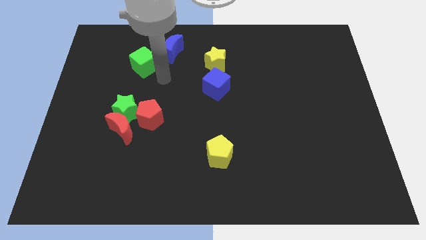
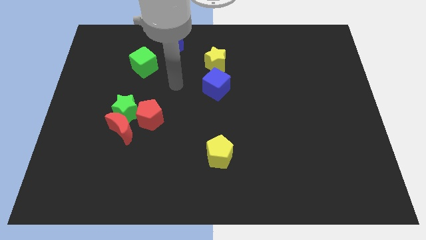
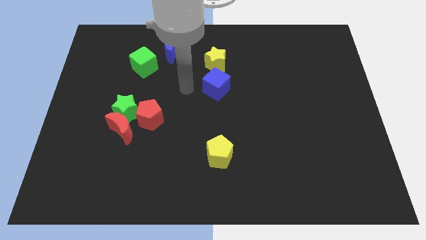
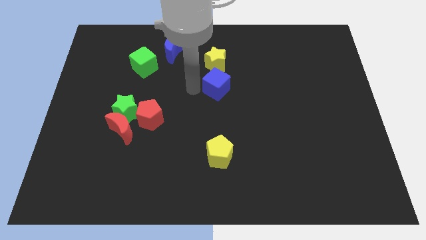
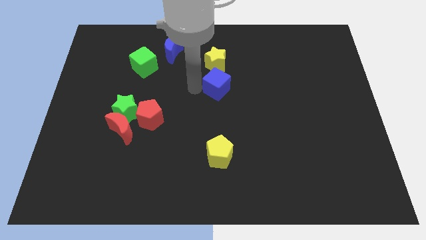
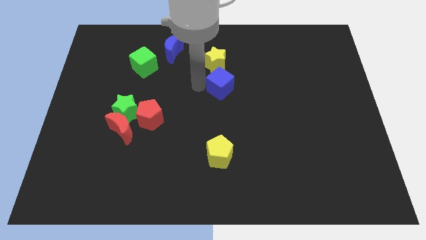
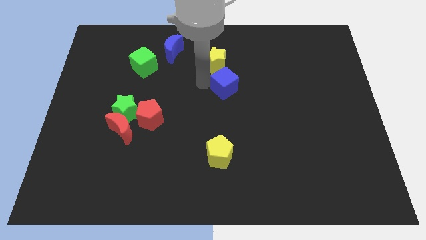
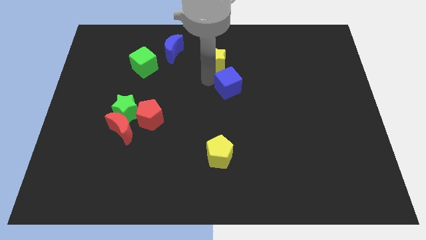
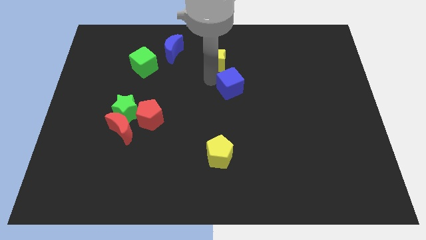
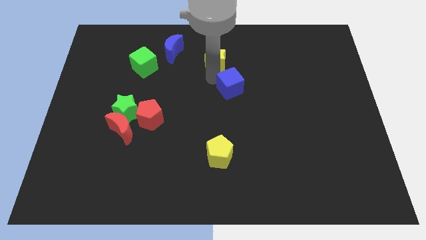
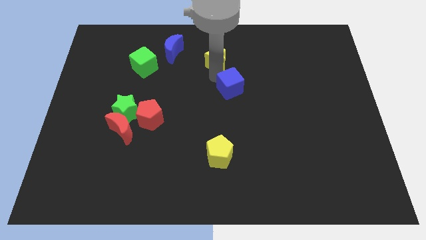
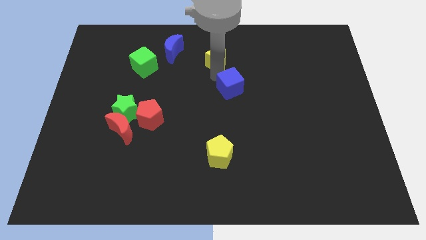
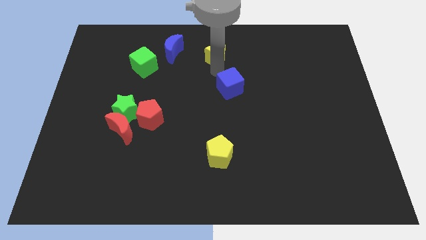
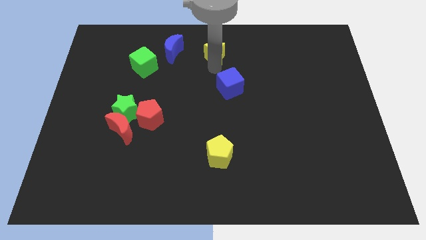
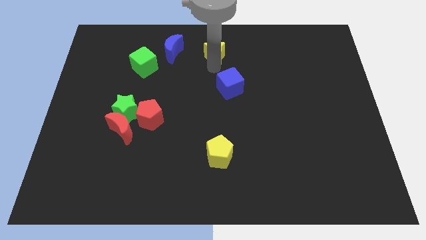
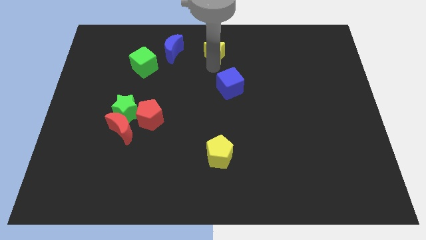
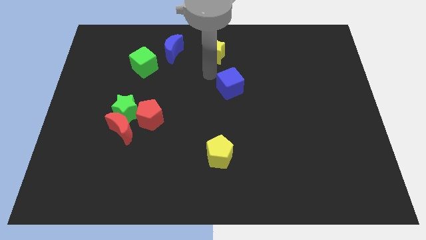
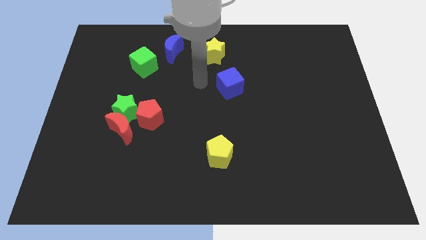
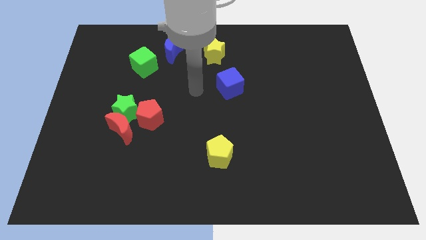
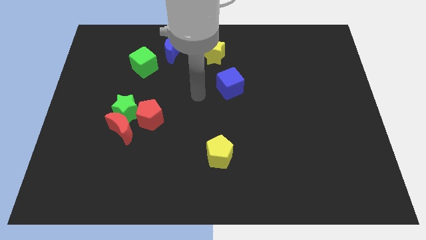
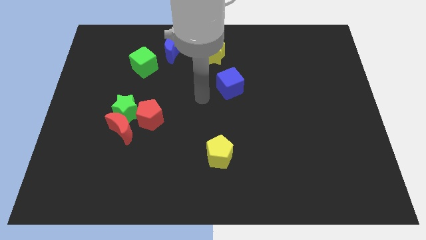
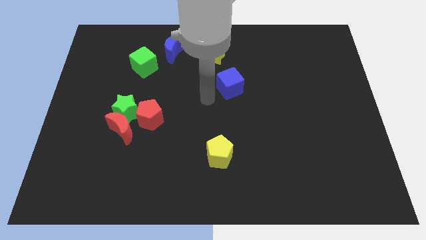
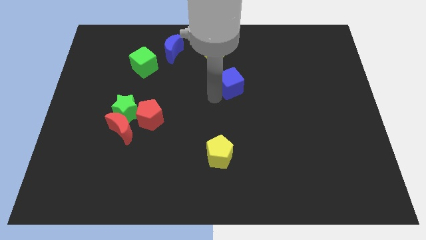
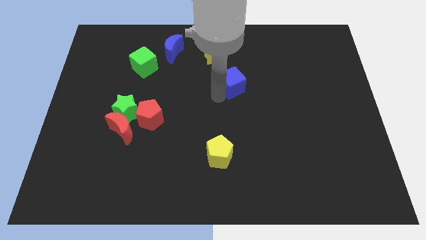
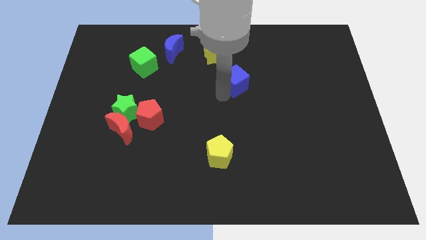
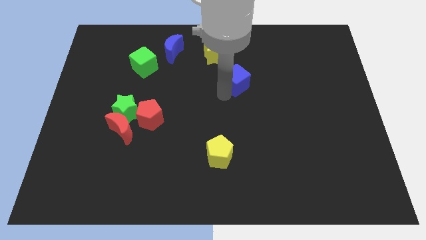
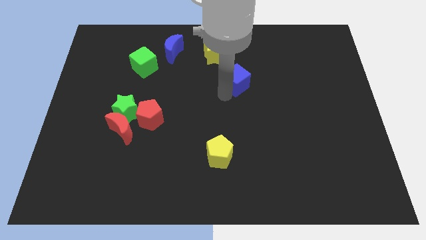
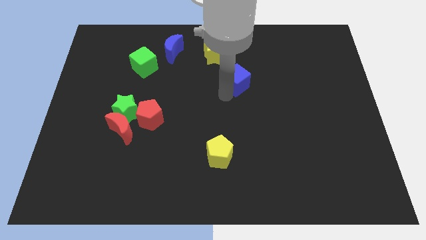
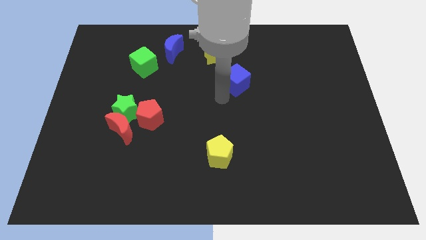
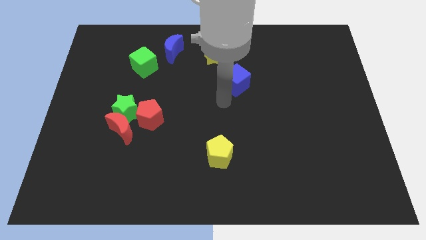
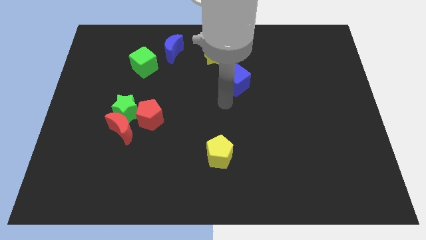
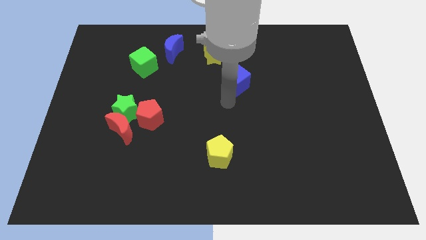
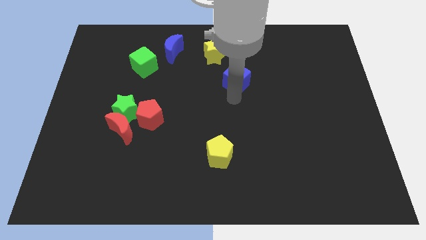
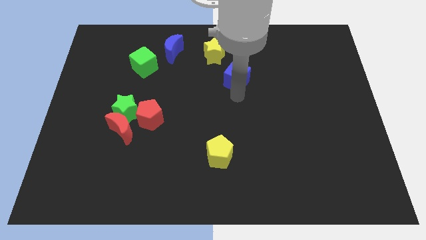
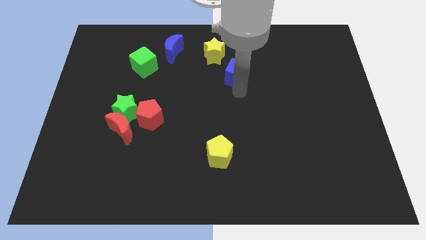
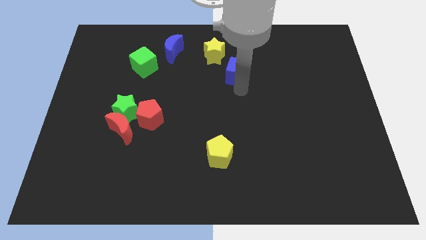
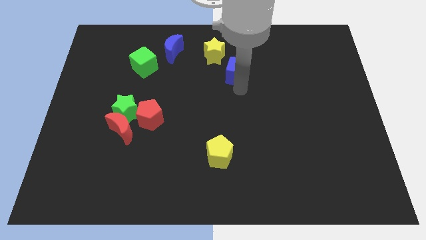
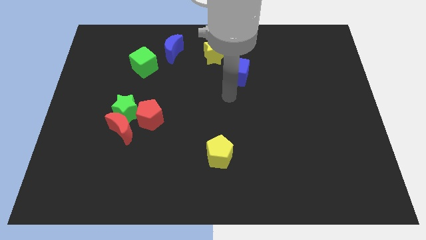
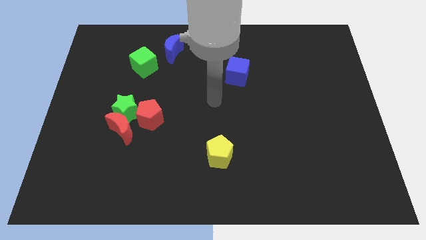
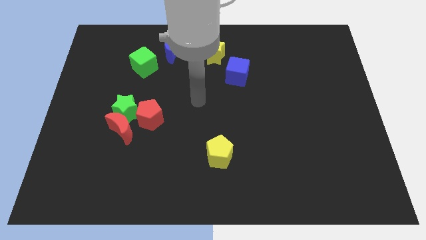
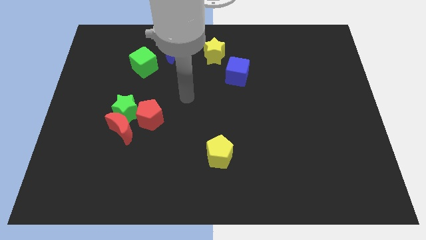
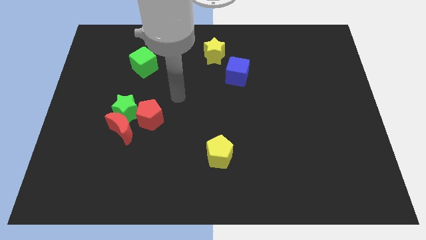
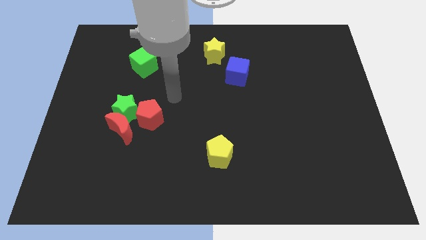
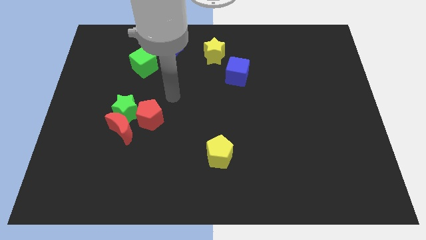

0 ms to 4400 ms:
place blue cube to the bottom right of yellow star

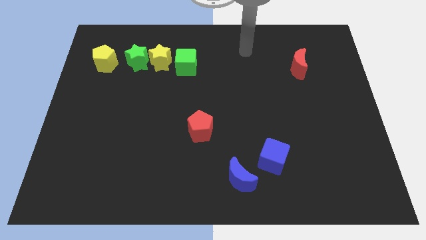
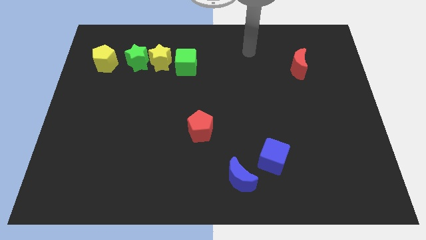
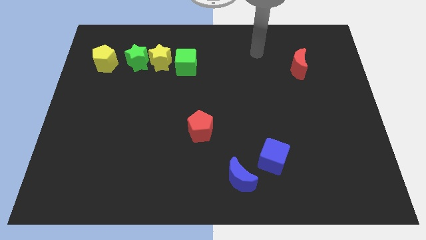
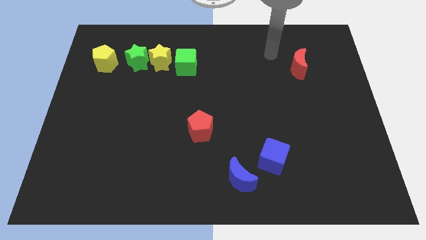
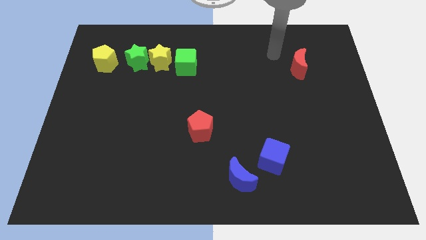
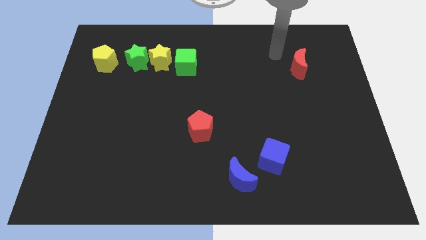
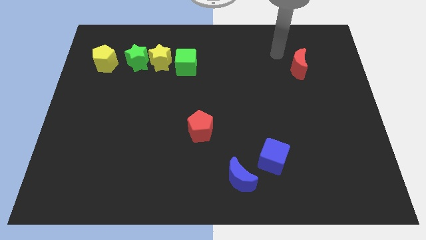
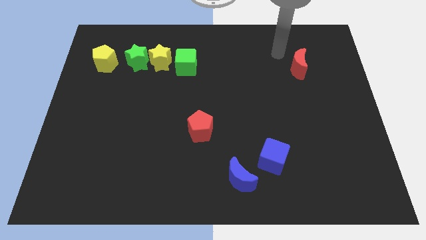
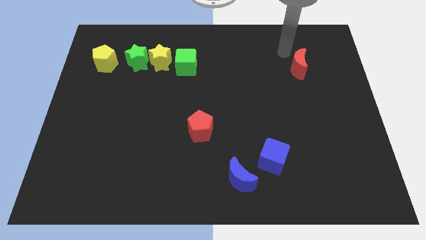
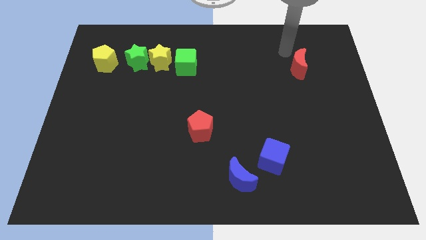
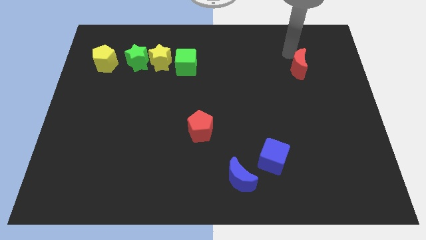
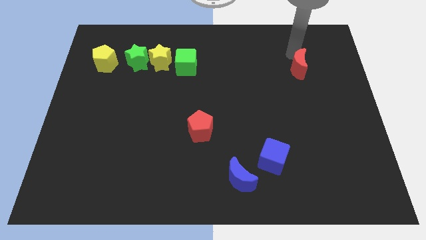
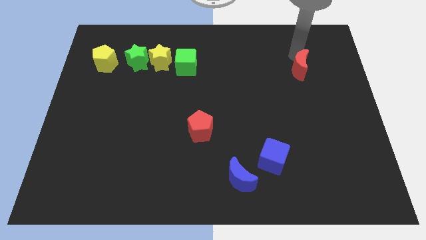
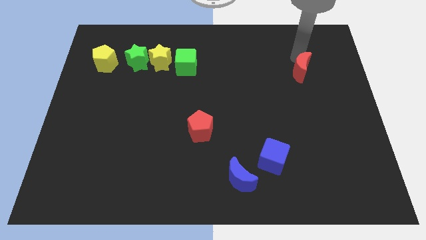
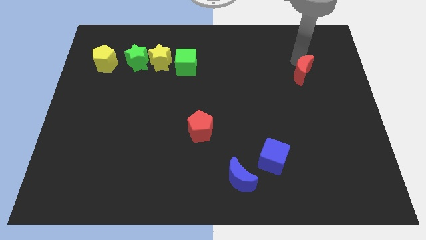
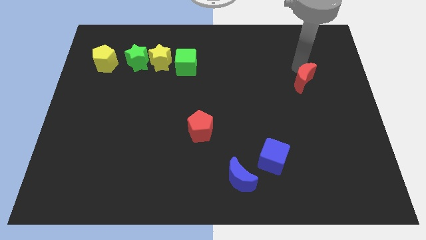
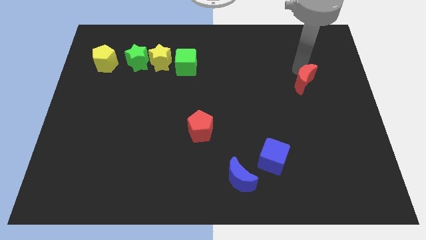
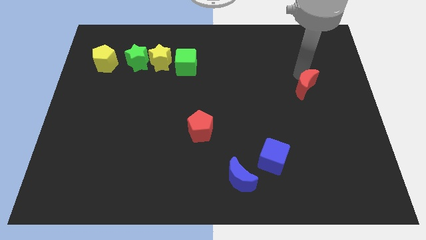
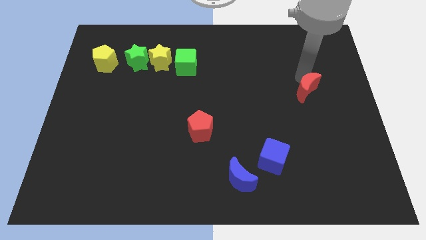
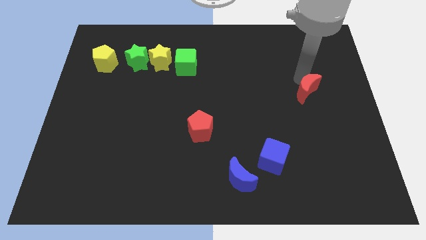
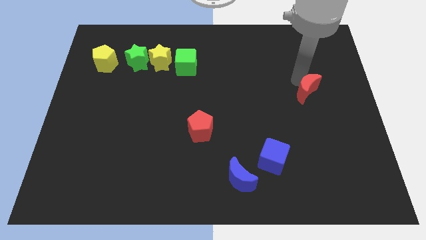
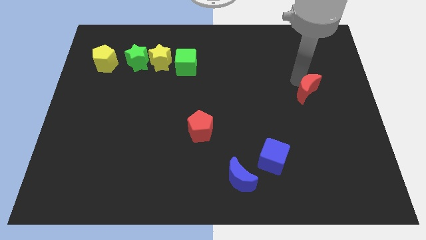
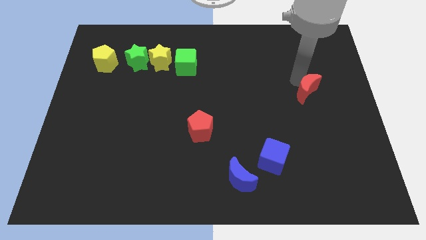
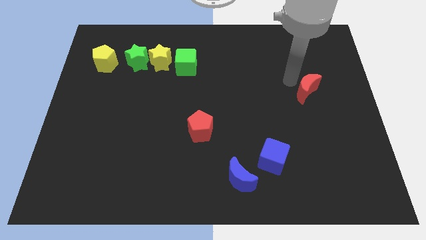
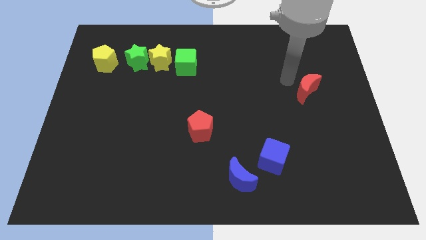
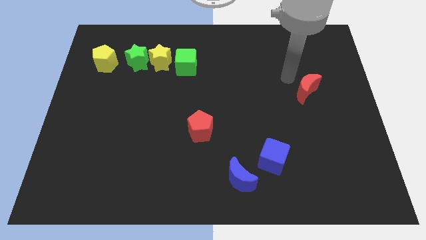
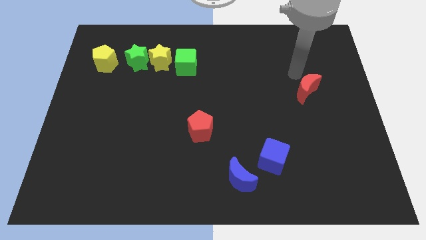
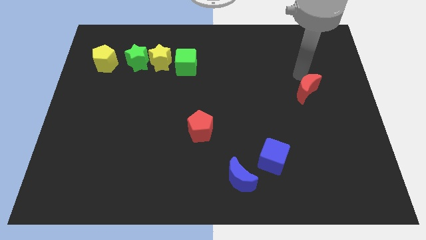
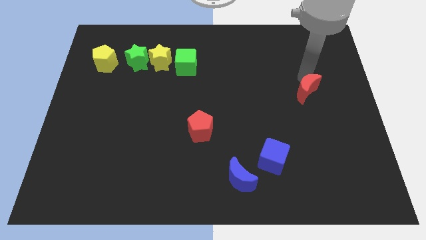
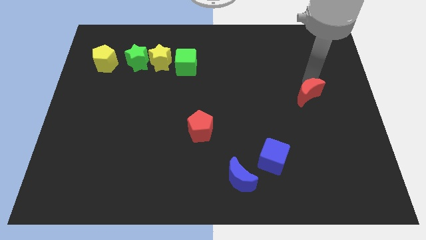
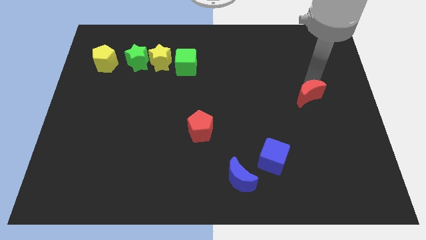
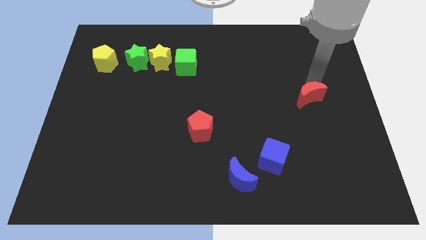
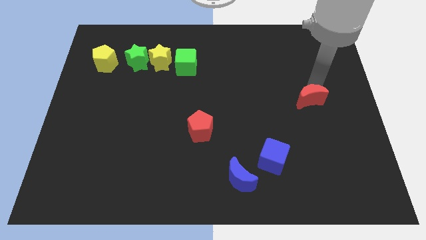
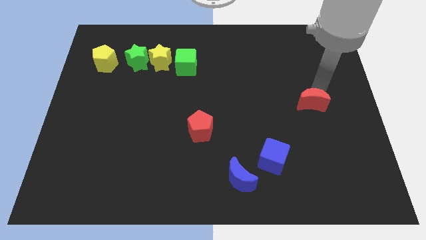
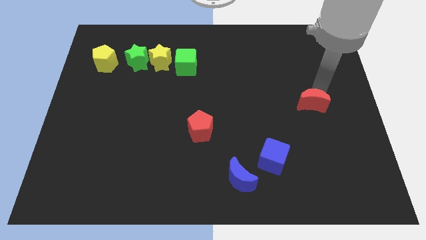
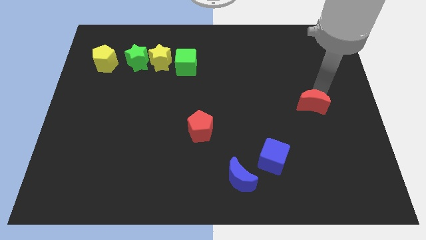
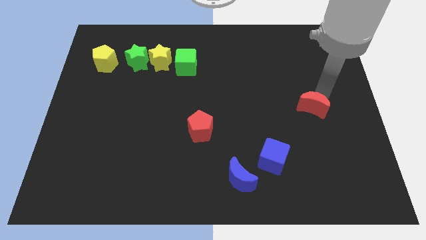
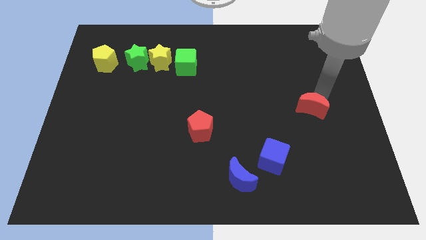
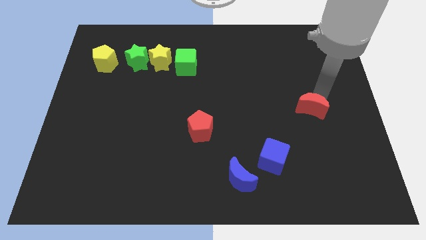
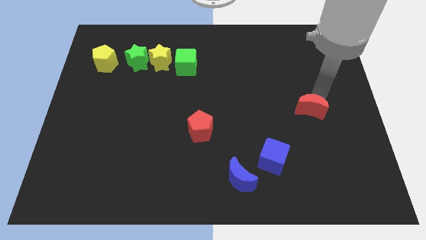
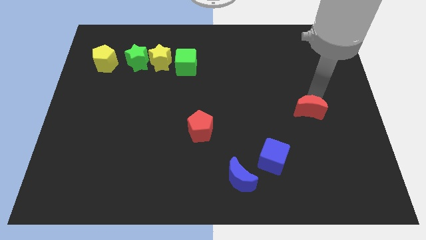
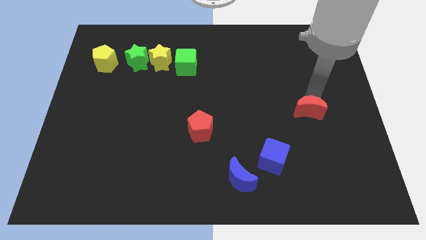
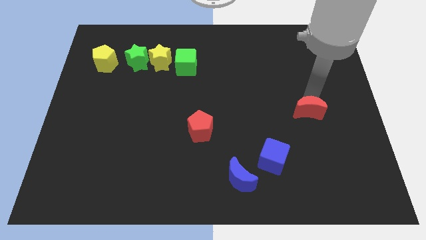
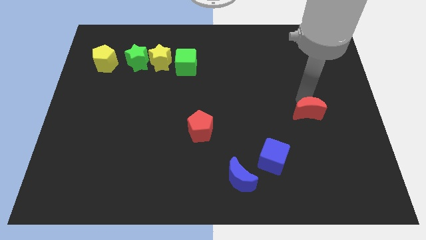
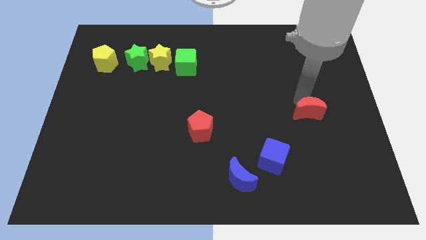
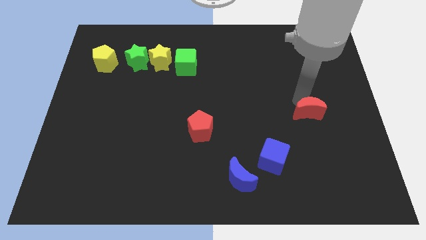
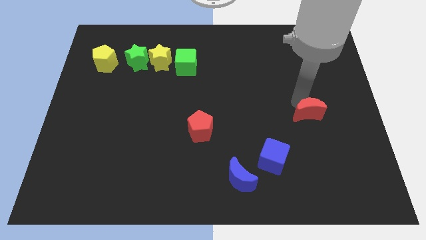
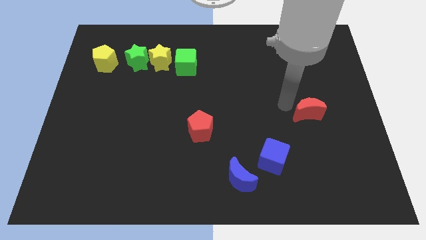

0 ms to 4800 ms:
push the red moon to the top right side of the blue cube
